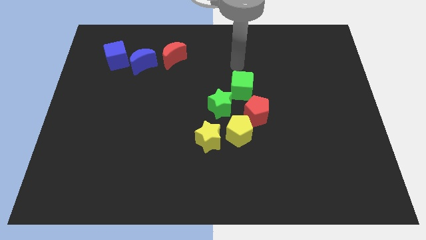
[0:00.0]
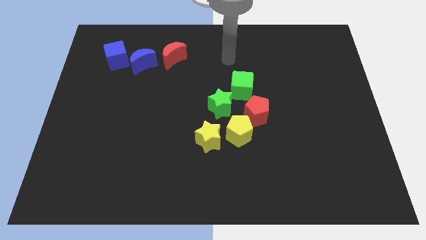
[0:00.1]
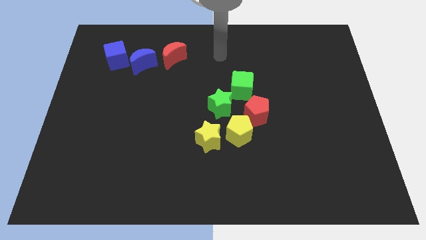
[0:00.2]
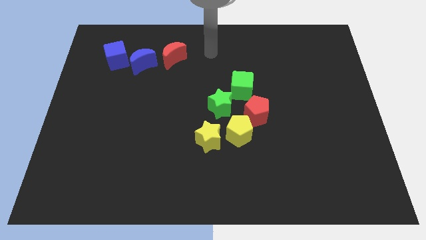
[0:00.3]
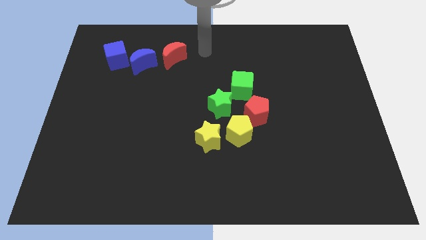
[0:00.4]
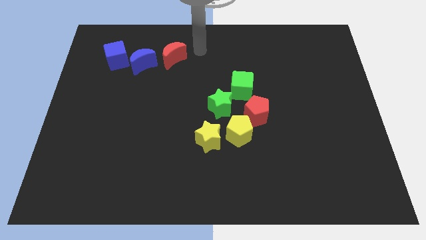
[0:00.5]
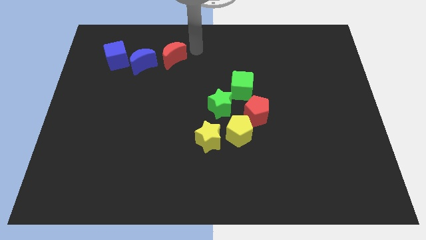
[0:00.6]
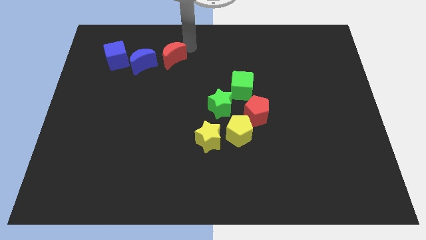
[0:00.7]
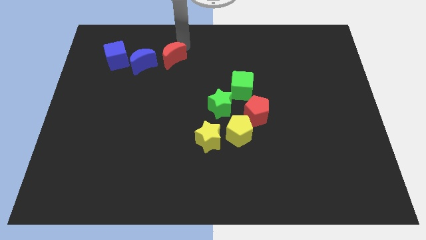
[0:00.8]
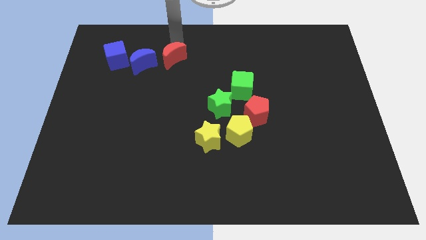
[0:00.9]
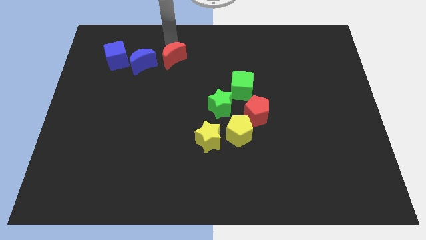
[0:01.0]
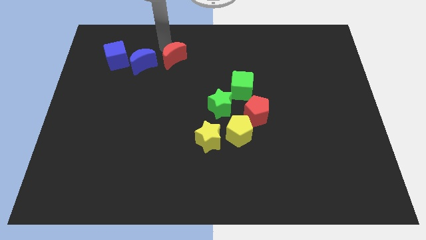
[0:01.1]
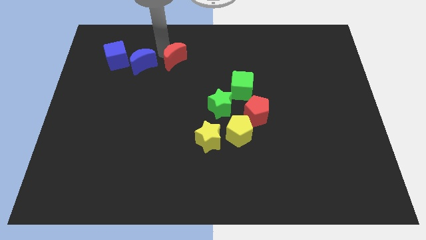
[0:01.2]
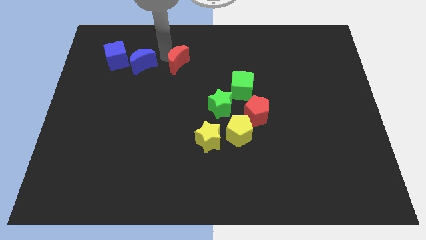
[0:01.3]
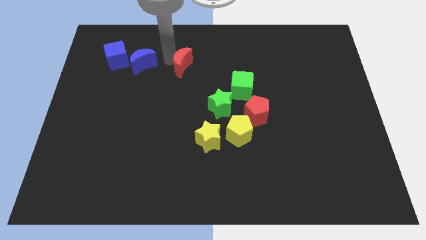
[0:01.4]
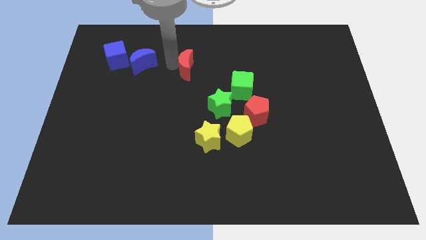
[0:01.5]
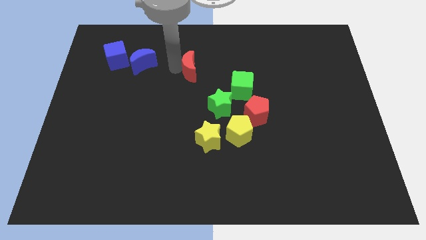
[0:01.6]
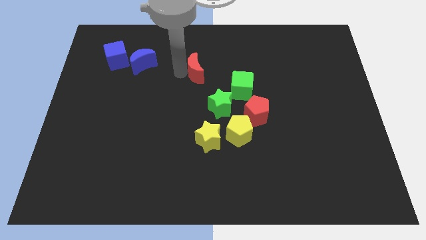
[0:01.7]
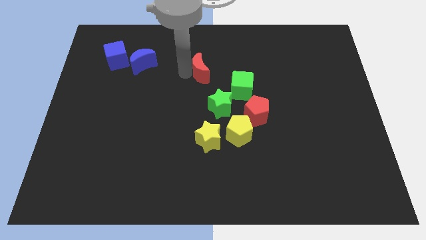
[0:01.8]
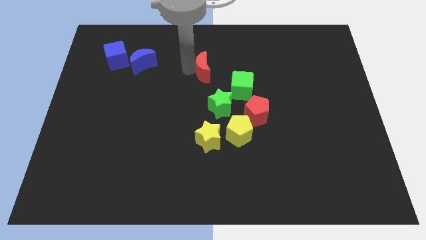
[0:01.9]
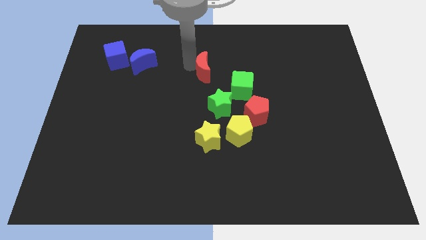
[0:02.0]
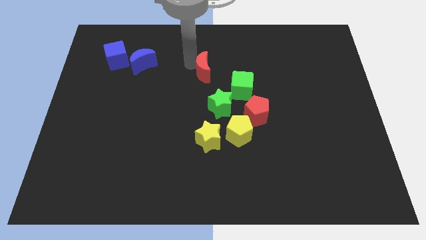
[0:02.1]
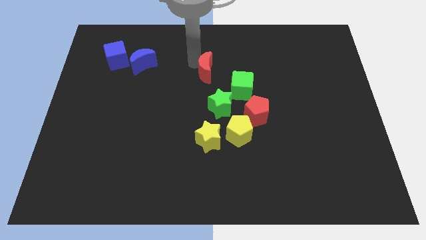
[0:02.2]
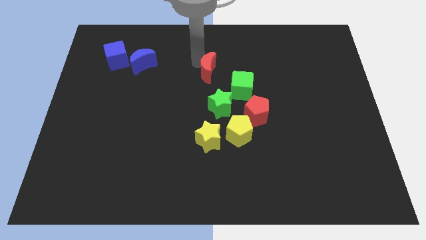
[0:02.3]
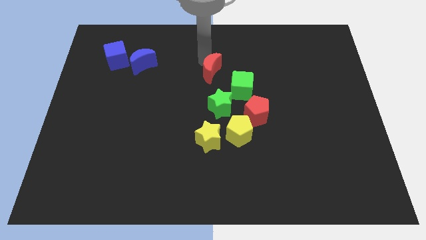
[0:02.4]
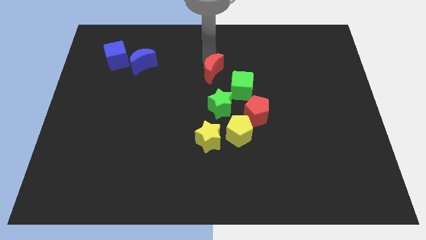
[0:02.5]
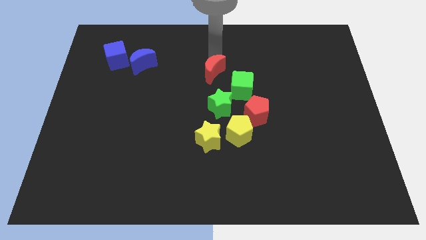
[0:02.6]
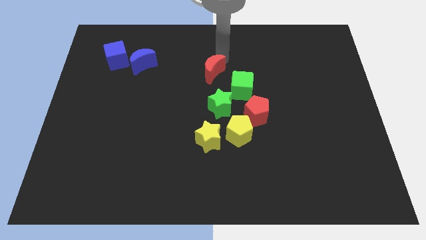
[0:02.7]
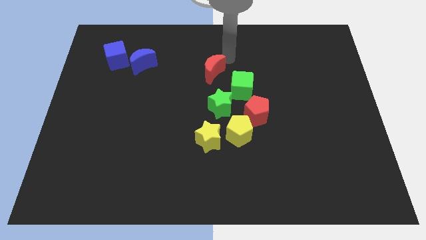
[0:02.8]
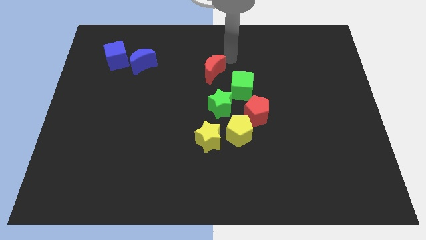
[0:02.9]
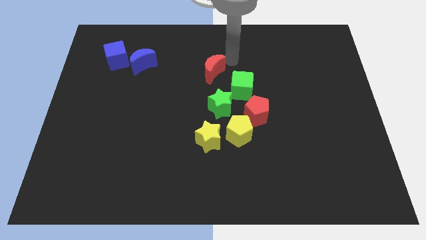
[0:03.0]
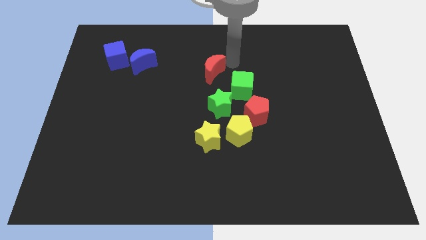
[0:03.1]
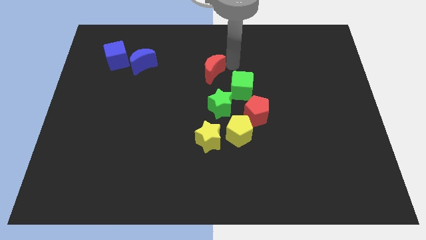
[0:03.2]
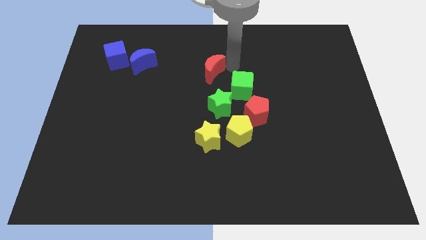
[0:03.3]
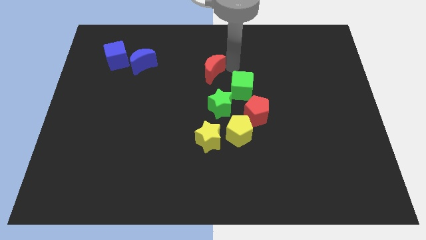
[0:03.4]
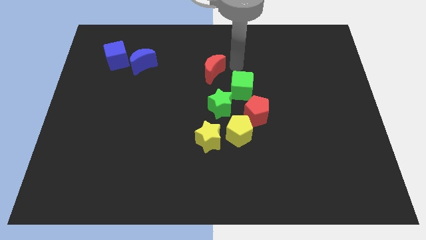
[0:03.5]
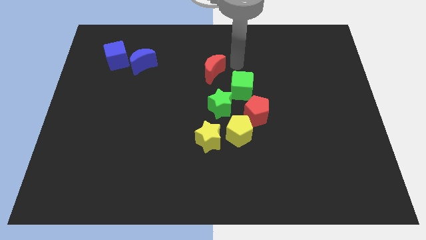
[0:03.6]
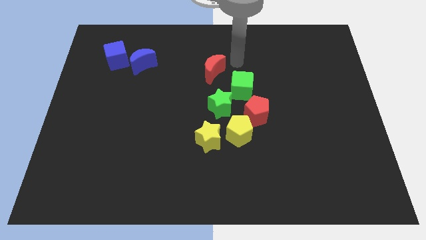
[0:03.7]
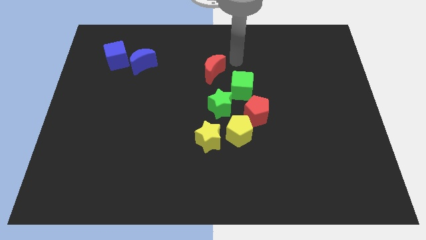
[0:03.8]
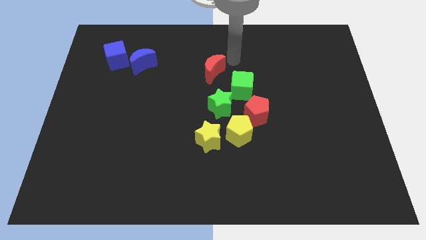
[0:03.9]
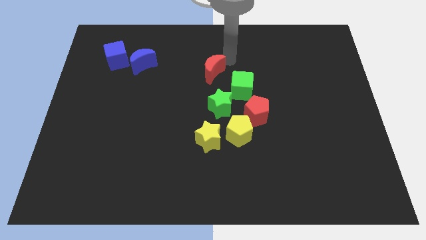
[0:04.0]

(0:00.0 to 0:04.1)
push the red moon towards the green cube

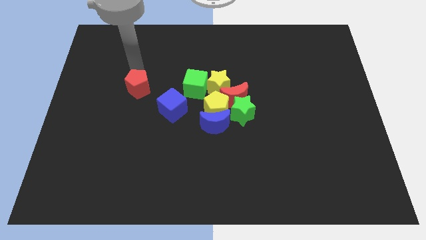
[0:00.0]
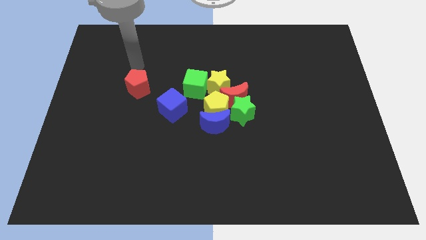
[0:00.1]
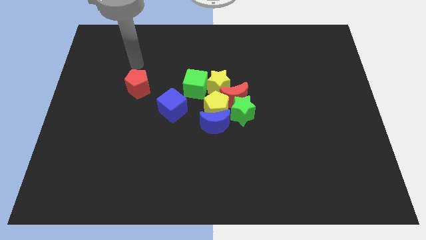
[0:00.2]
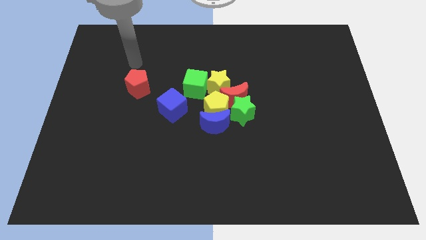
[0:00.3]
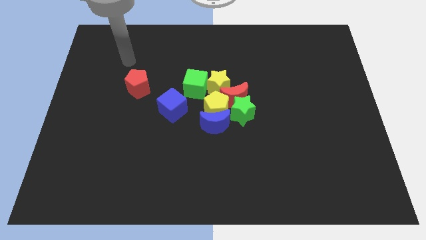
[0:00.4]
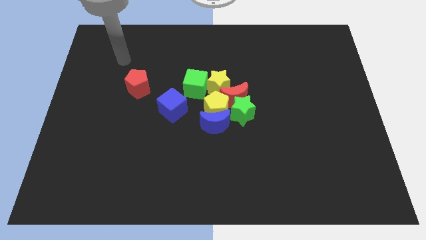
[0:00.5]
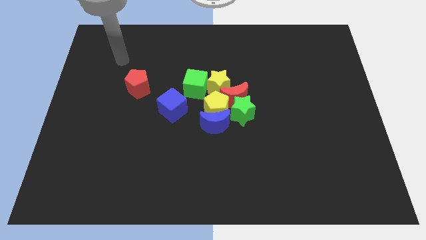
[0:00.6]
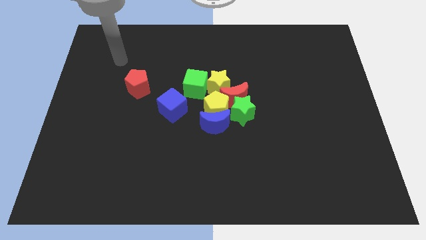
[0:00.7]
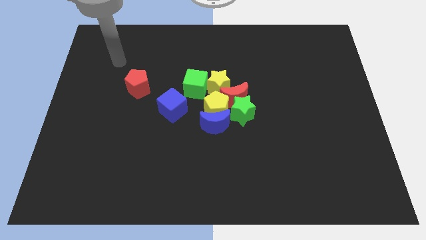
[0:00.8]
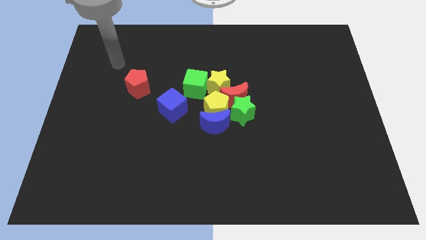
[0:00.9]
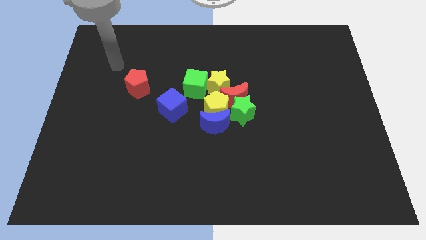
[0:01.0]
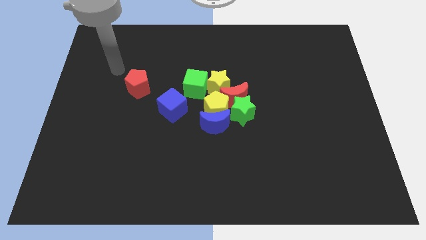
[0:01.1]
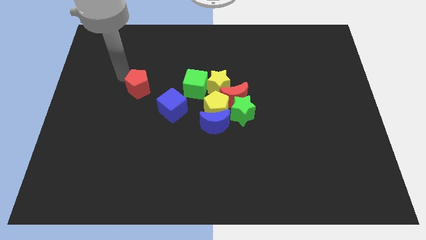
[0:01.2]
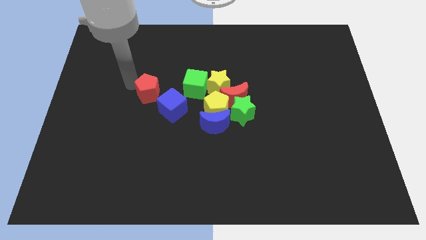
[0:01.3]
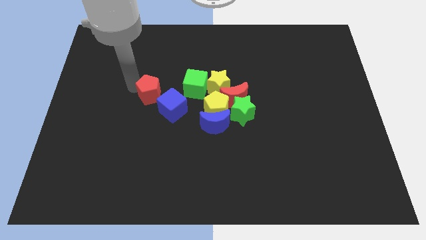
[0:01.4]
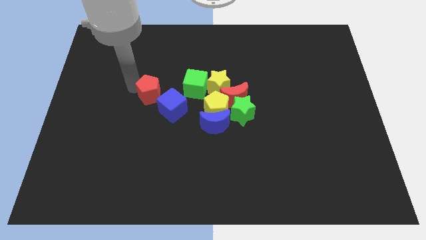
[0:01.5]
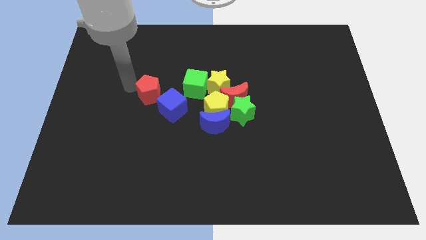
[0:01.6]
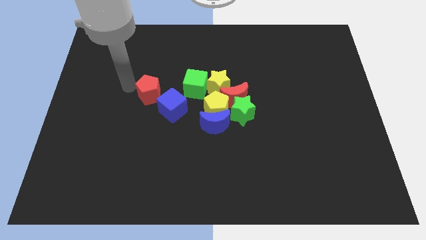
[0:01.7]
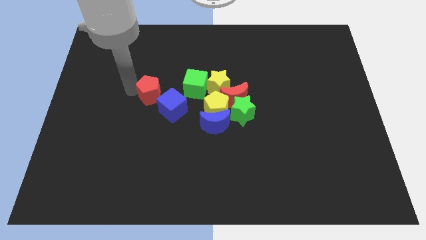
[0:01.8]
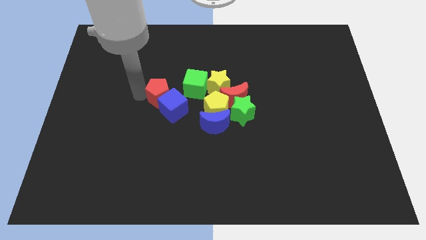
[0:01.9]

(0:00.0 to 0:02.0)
push the red pentagon at the top left side of the blue cube

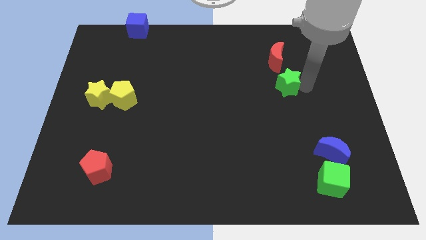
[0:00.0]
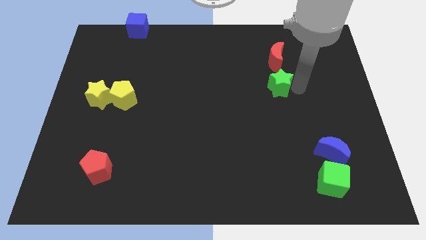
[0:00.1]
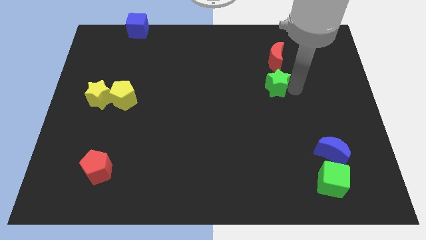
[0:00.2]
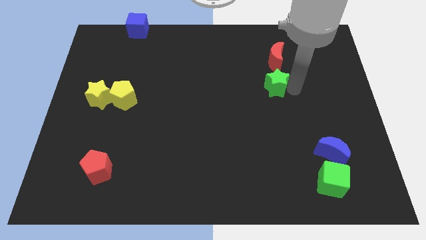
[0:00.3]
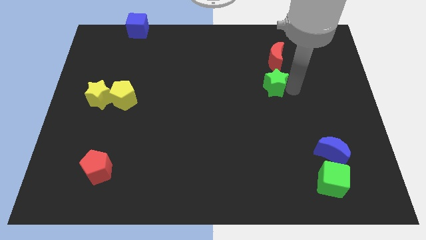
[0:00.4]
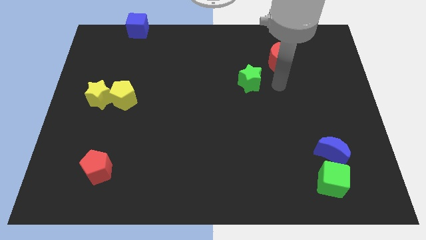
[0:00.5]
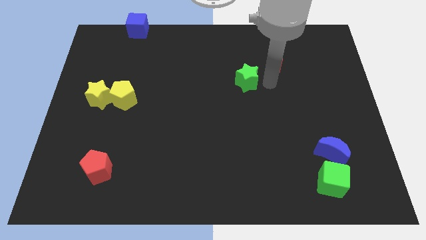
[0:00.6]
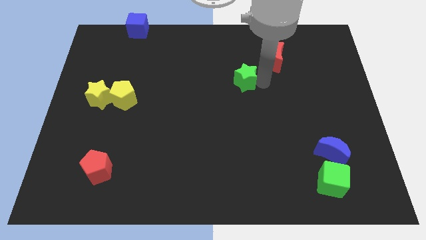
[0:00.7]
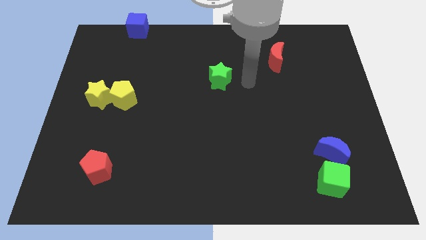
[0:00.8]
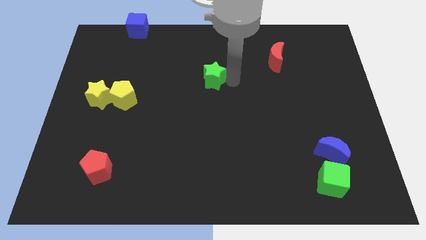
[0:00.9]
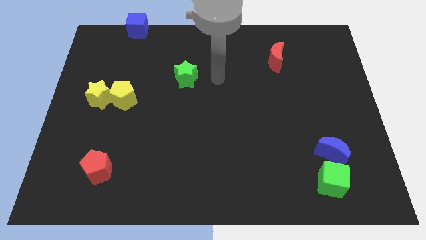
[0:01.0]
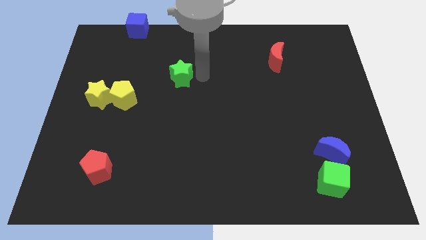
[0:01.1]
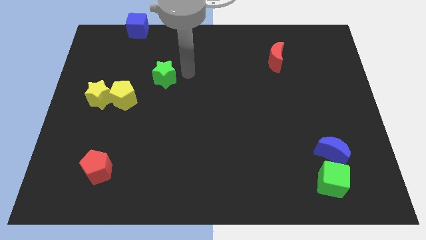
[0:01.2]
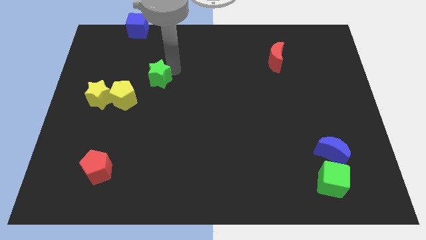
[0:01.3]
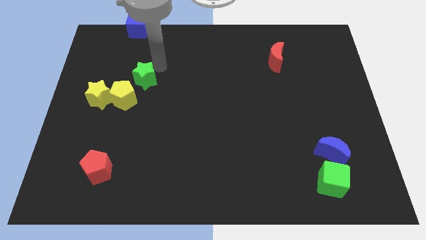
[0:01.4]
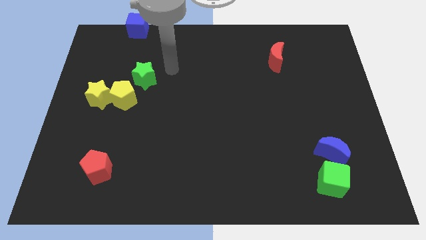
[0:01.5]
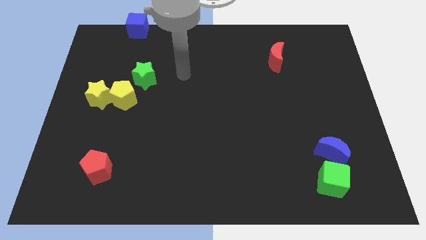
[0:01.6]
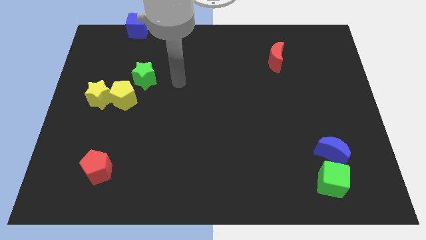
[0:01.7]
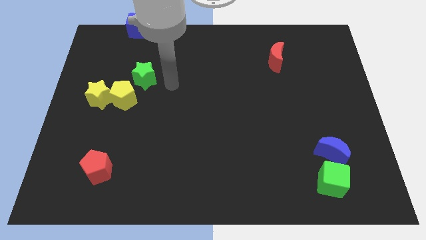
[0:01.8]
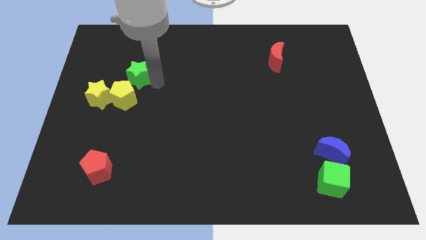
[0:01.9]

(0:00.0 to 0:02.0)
push the green star near to the yellow pentagon

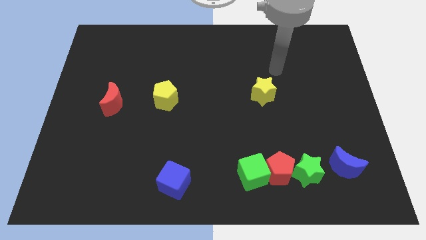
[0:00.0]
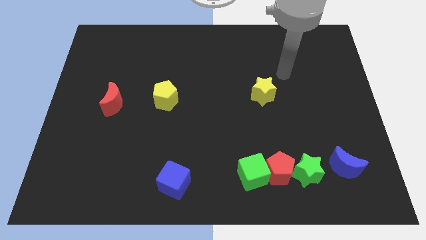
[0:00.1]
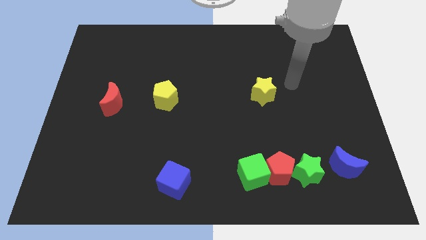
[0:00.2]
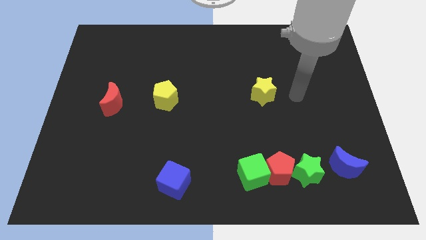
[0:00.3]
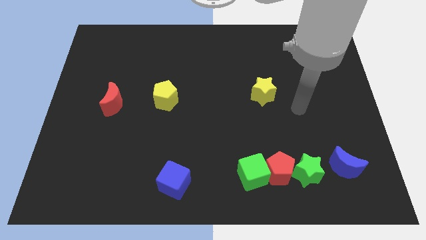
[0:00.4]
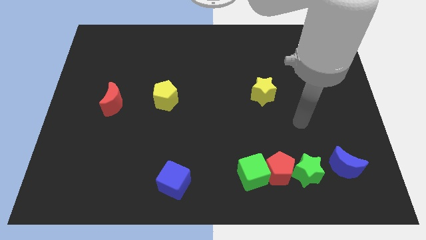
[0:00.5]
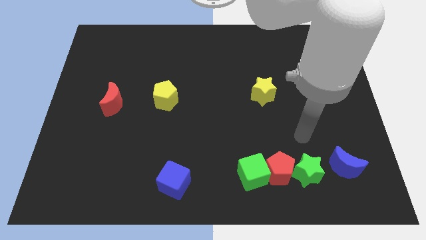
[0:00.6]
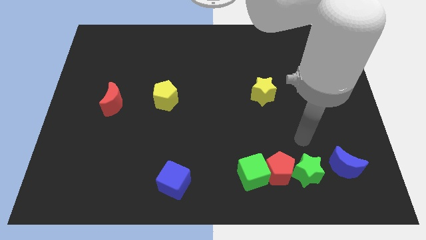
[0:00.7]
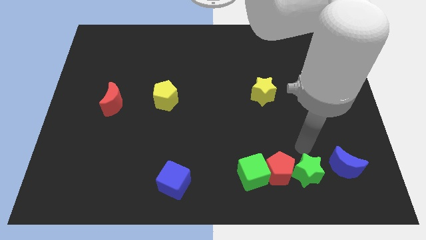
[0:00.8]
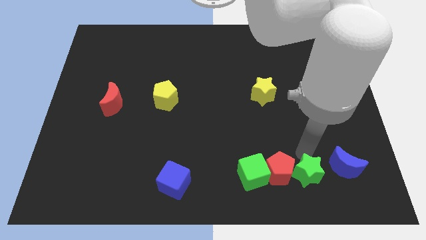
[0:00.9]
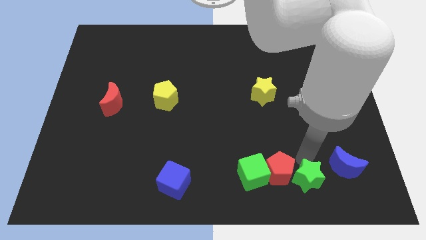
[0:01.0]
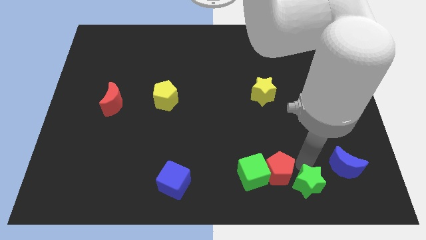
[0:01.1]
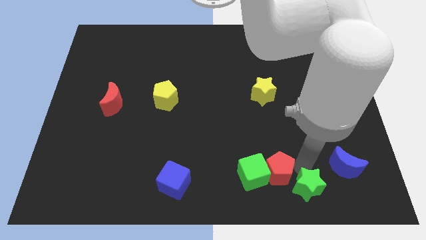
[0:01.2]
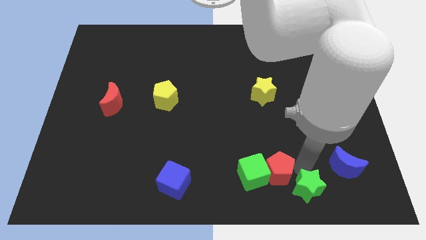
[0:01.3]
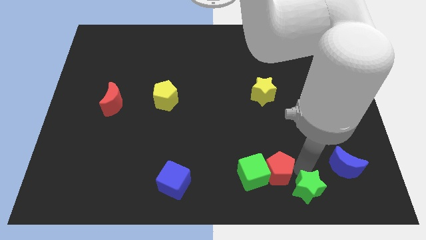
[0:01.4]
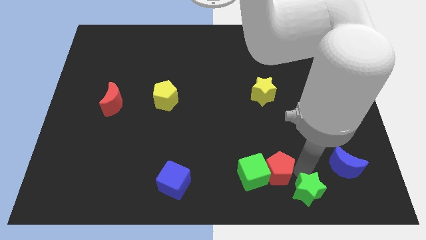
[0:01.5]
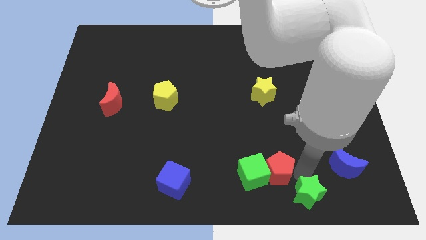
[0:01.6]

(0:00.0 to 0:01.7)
slide the green star slightly downwards
